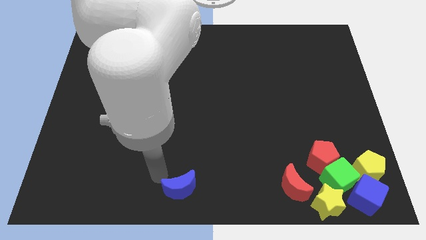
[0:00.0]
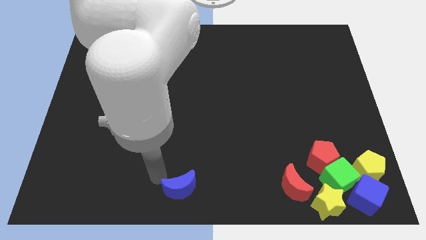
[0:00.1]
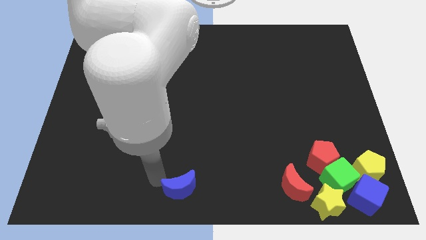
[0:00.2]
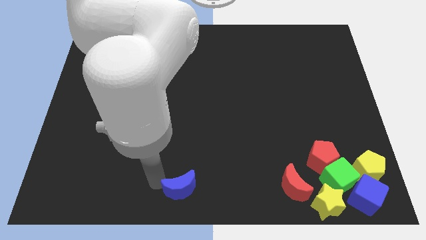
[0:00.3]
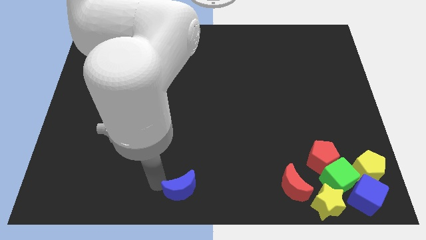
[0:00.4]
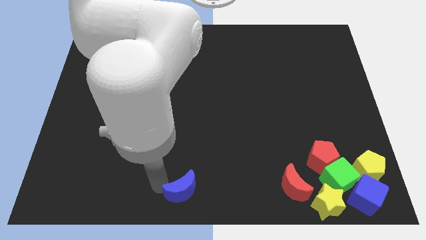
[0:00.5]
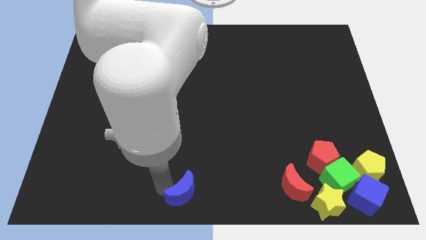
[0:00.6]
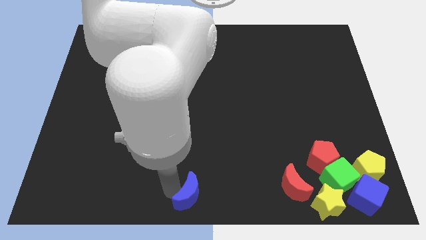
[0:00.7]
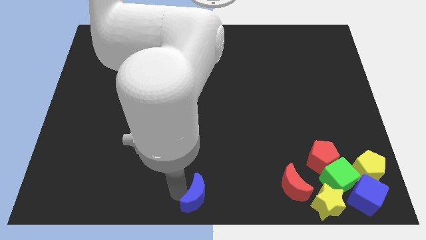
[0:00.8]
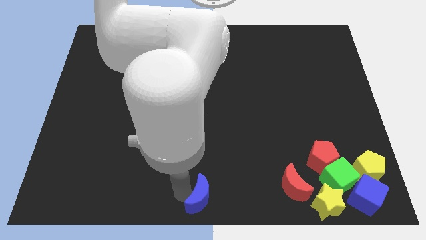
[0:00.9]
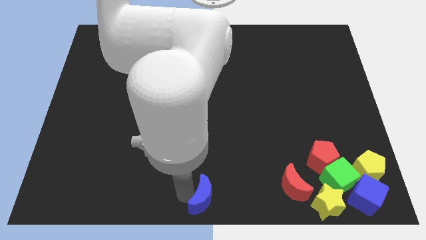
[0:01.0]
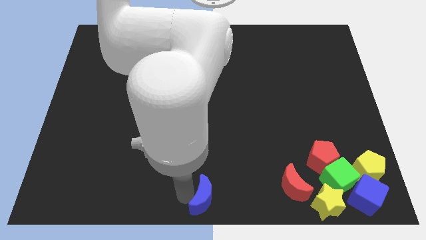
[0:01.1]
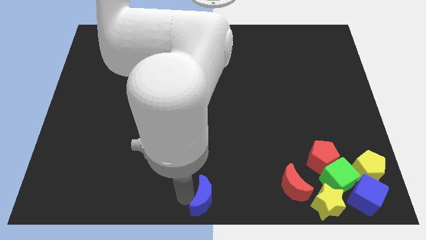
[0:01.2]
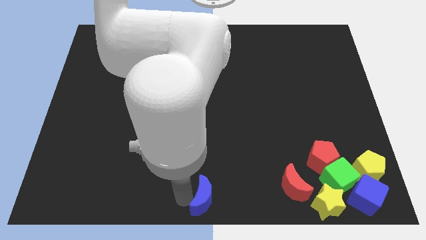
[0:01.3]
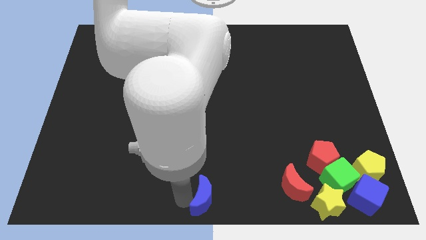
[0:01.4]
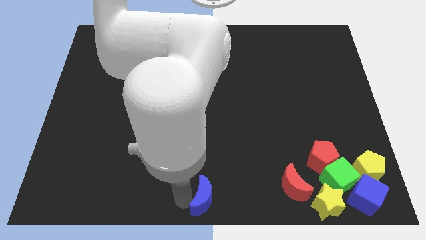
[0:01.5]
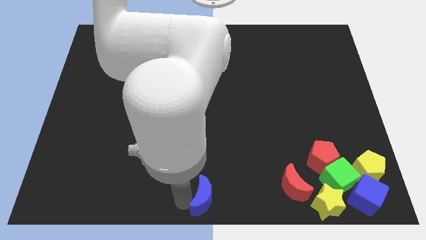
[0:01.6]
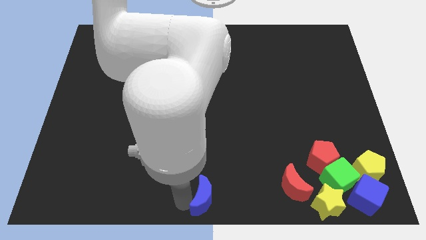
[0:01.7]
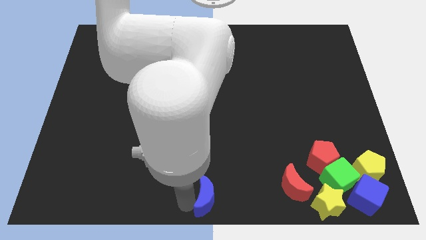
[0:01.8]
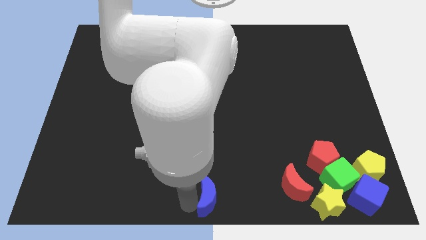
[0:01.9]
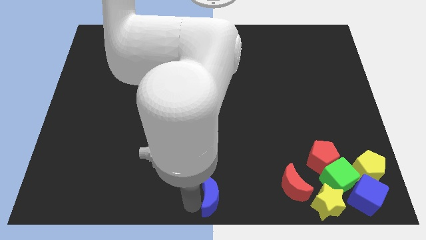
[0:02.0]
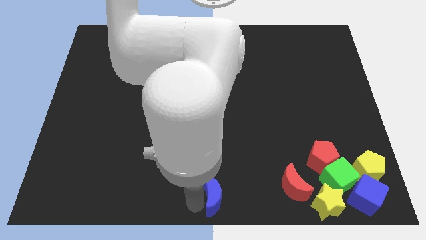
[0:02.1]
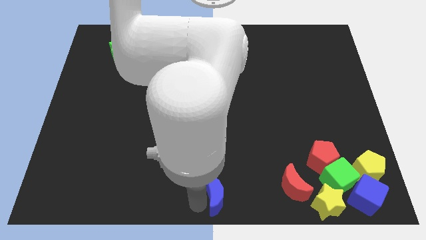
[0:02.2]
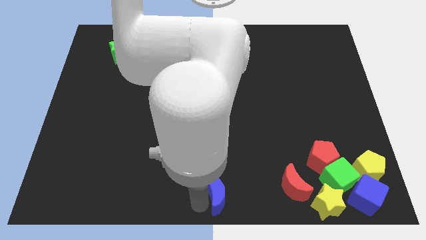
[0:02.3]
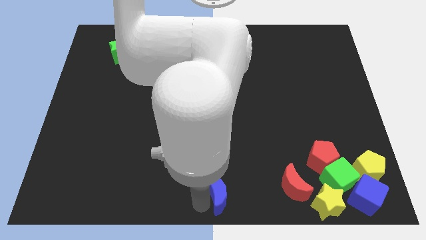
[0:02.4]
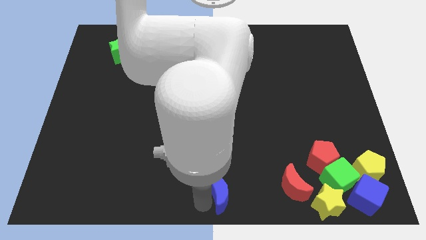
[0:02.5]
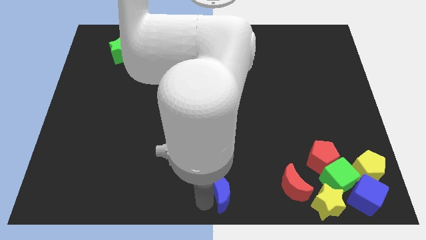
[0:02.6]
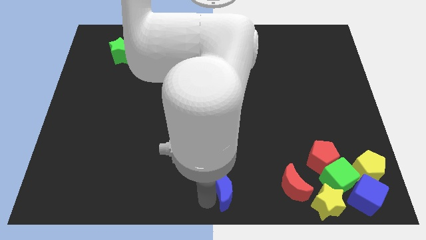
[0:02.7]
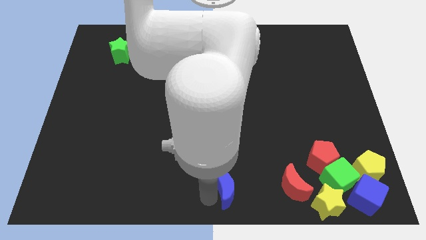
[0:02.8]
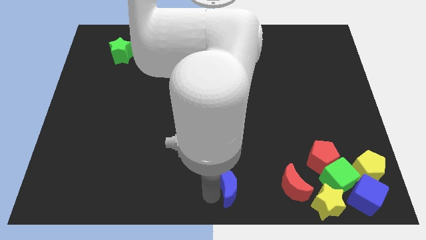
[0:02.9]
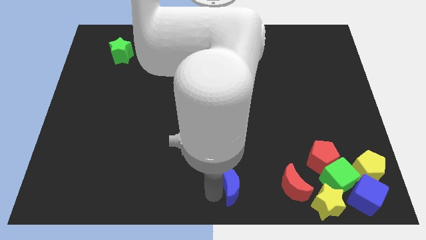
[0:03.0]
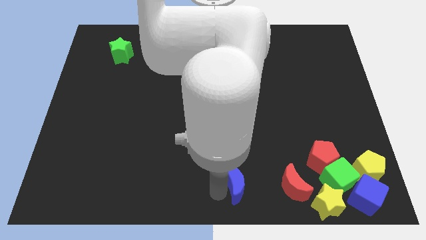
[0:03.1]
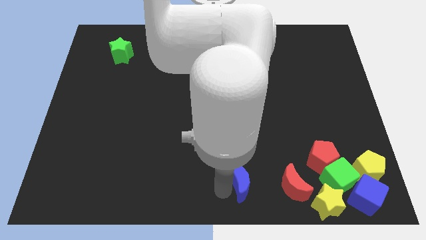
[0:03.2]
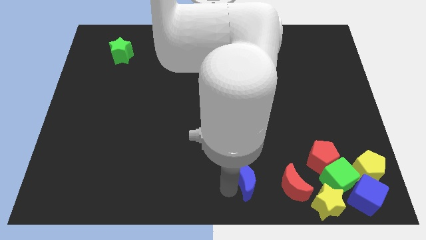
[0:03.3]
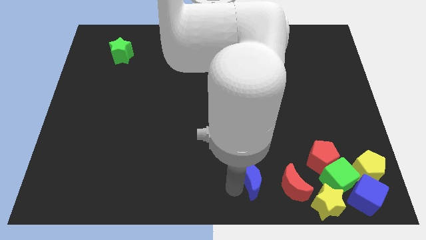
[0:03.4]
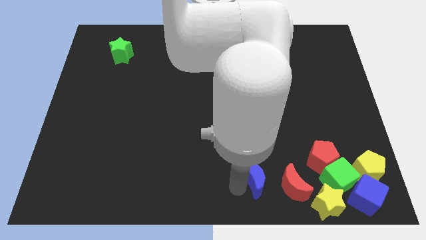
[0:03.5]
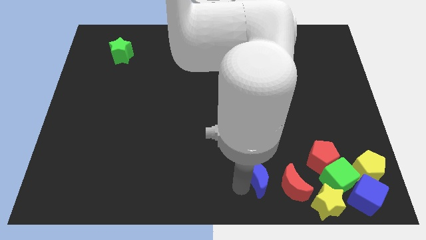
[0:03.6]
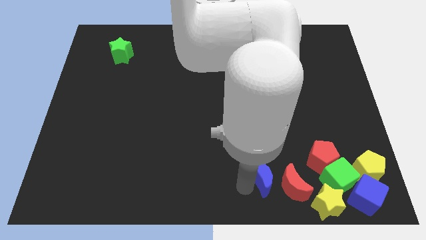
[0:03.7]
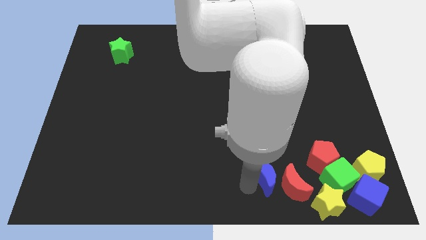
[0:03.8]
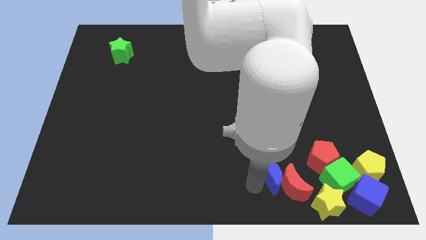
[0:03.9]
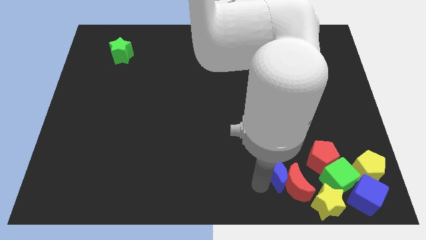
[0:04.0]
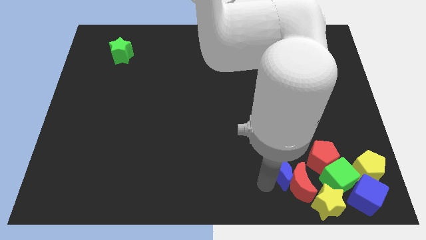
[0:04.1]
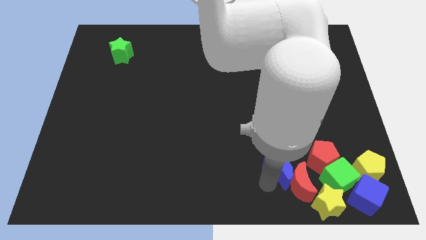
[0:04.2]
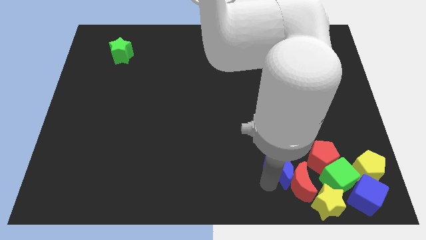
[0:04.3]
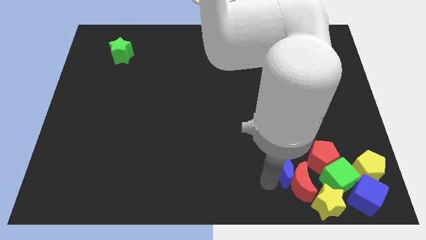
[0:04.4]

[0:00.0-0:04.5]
make the blue crescent to touch the left side of the red crescent

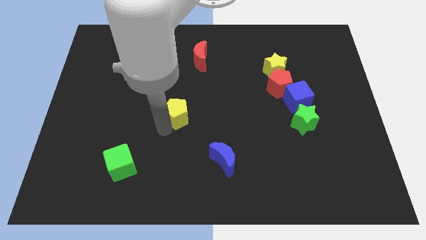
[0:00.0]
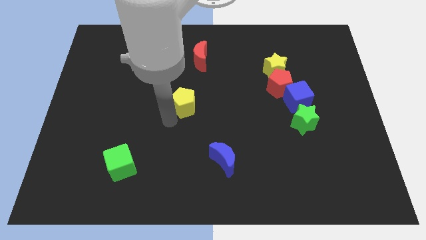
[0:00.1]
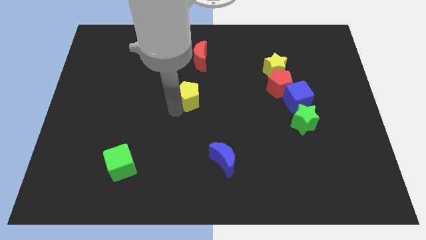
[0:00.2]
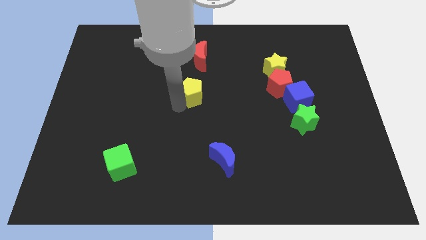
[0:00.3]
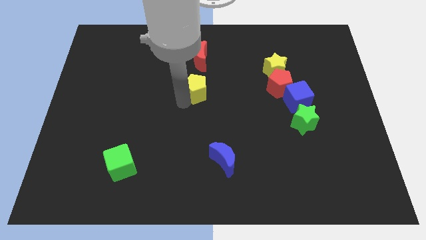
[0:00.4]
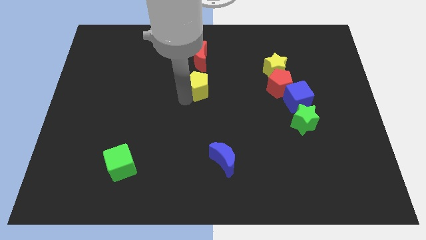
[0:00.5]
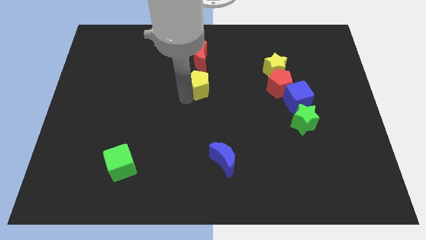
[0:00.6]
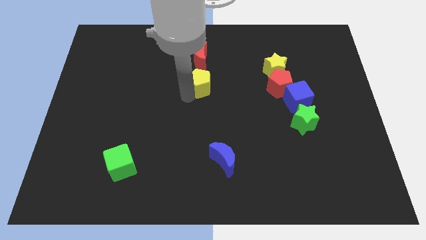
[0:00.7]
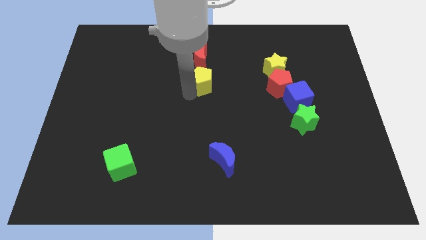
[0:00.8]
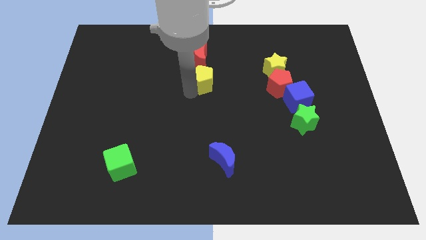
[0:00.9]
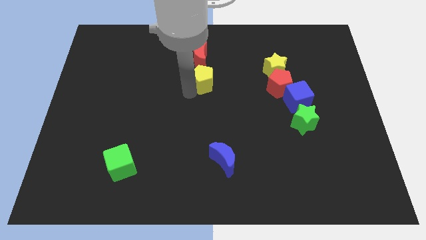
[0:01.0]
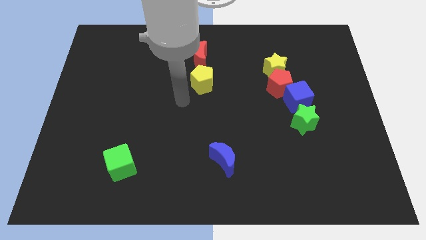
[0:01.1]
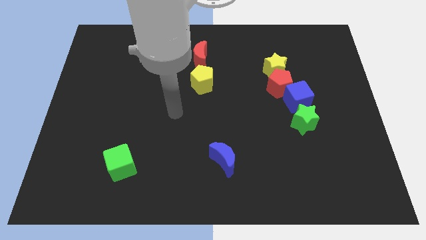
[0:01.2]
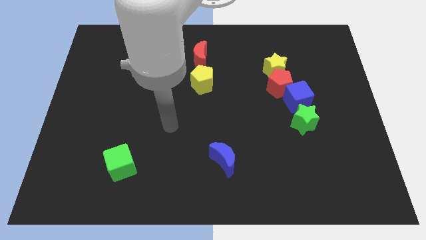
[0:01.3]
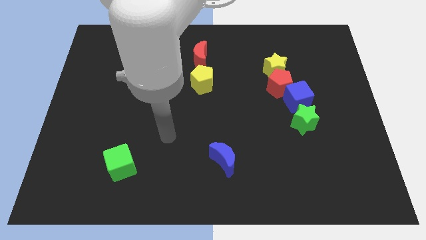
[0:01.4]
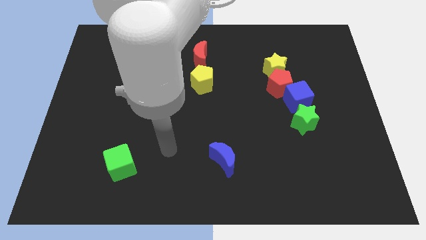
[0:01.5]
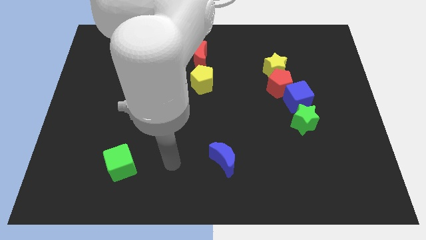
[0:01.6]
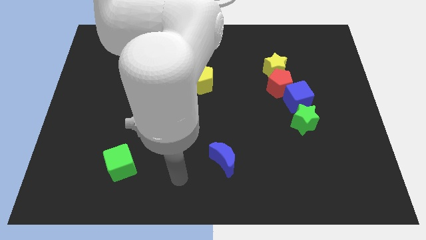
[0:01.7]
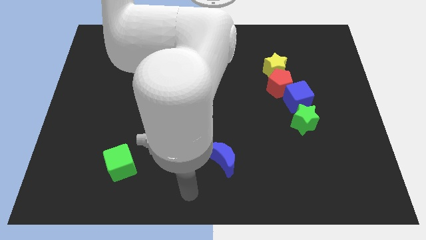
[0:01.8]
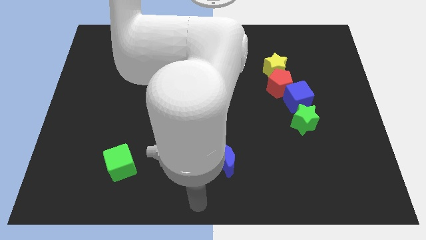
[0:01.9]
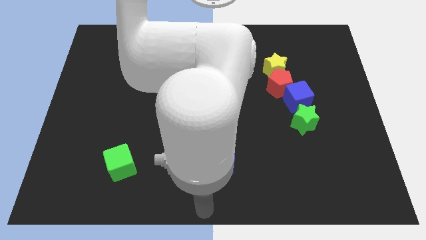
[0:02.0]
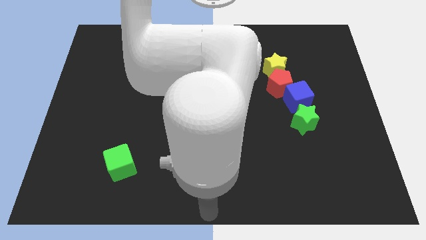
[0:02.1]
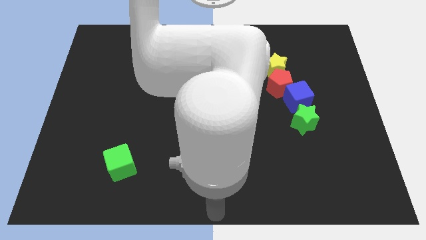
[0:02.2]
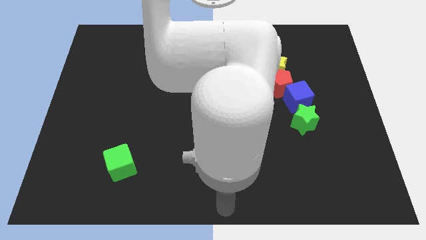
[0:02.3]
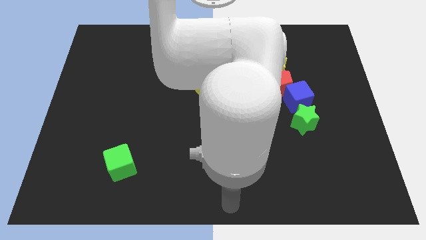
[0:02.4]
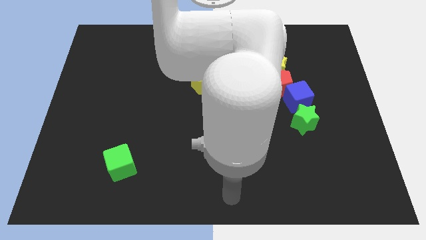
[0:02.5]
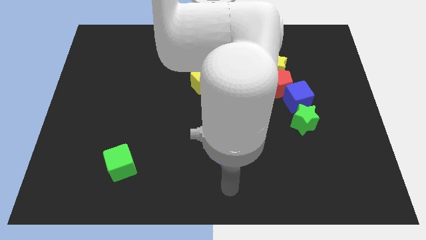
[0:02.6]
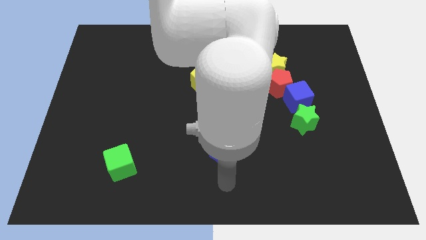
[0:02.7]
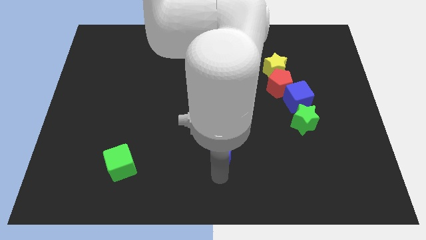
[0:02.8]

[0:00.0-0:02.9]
place the arm down to the blue moon

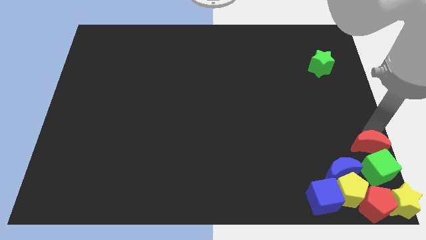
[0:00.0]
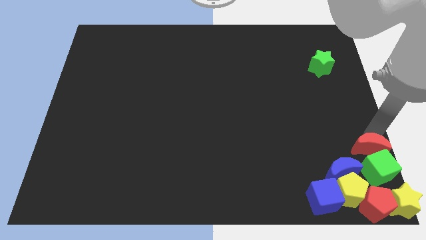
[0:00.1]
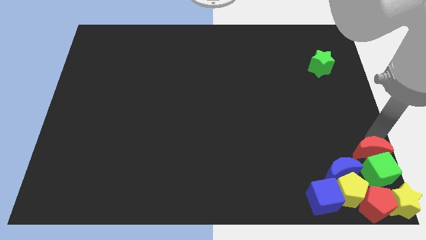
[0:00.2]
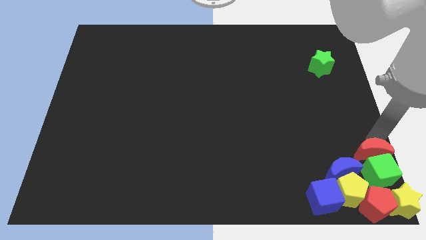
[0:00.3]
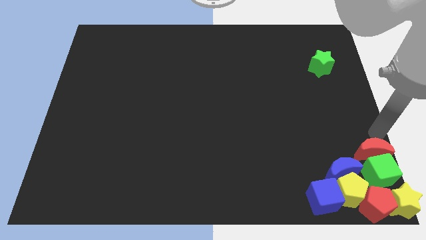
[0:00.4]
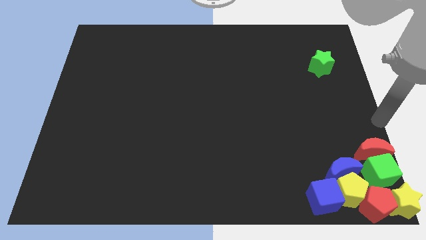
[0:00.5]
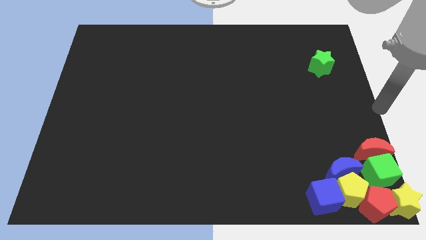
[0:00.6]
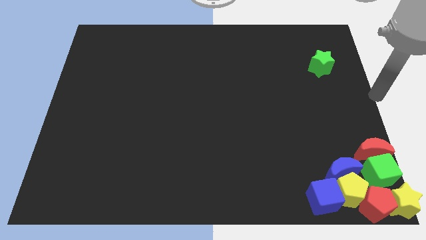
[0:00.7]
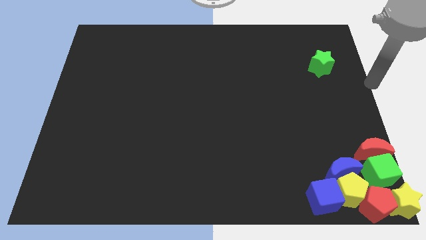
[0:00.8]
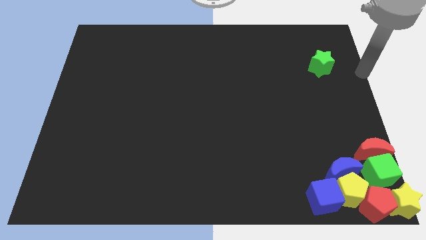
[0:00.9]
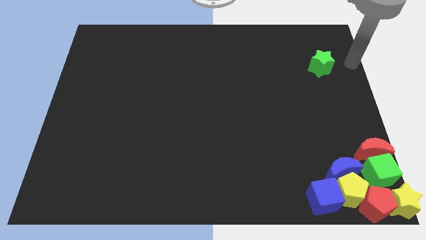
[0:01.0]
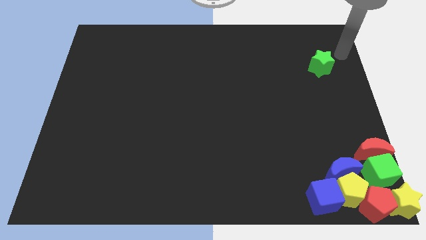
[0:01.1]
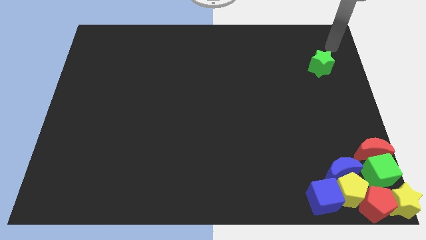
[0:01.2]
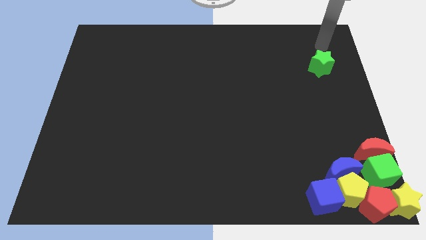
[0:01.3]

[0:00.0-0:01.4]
move your arm away from the red crescent

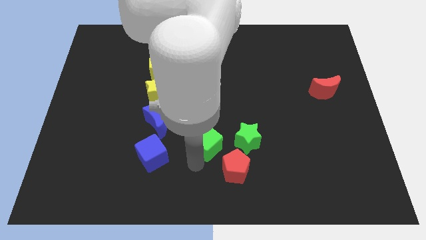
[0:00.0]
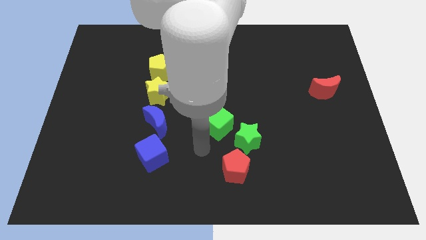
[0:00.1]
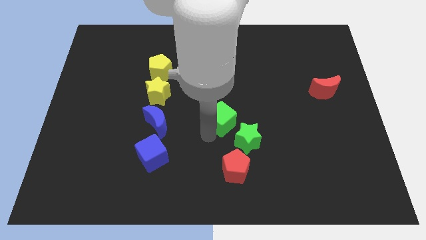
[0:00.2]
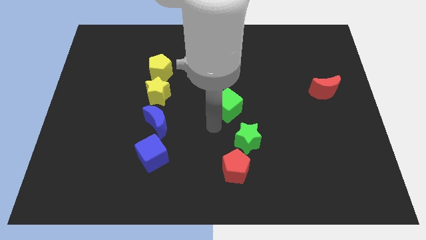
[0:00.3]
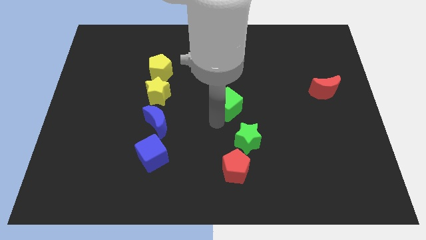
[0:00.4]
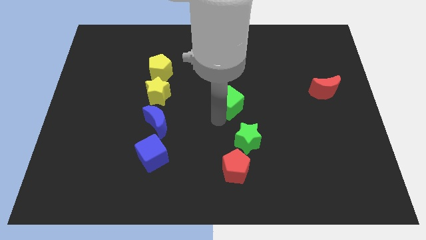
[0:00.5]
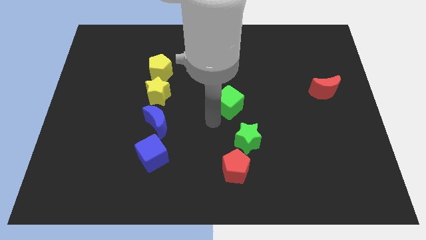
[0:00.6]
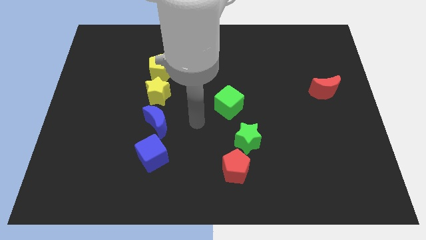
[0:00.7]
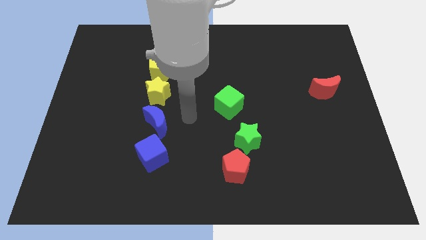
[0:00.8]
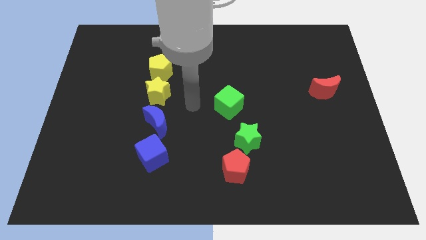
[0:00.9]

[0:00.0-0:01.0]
move the green cube to the center of the board
